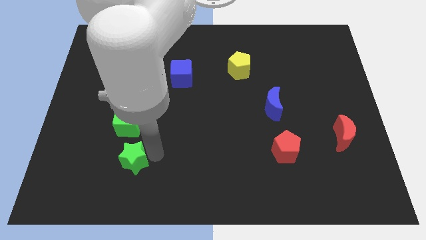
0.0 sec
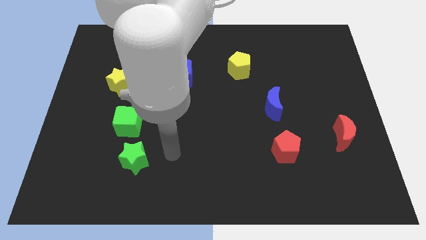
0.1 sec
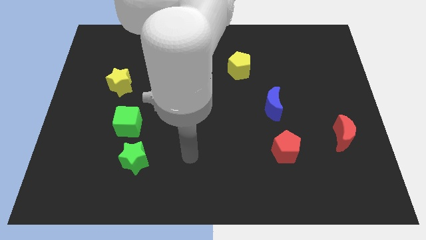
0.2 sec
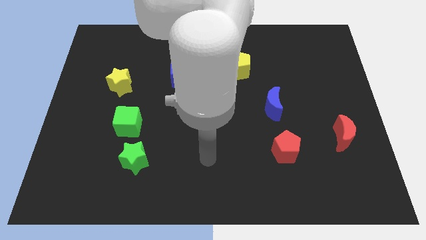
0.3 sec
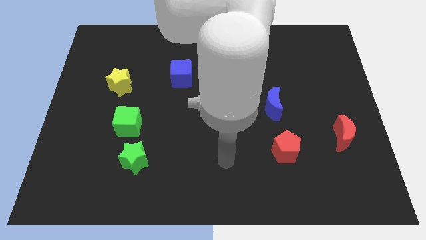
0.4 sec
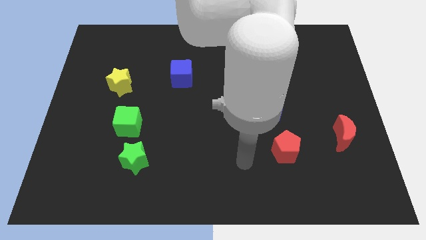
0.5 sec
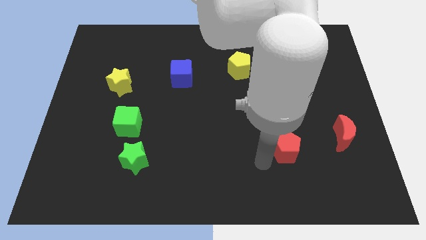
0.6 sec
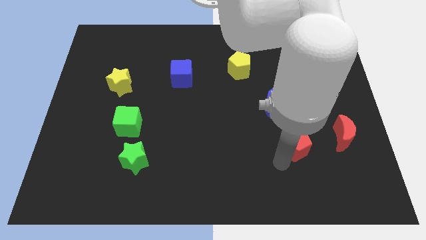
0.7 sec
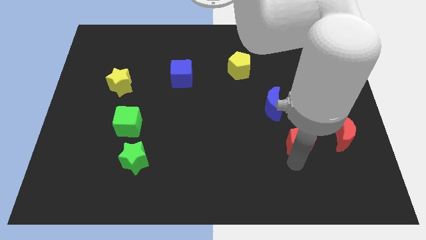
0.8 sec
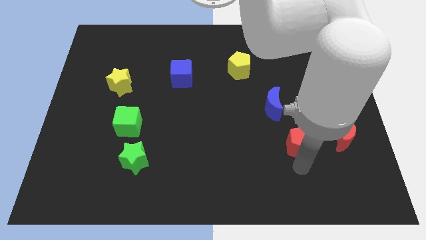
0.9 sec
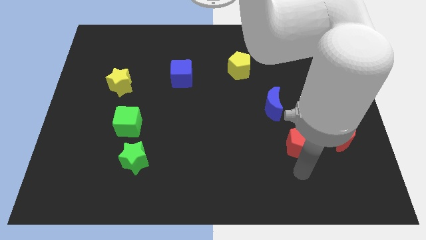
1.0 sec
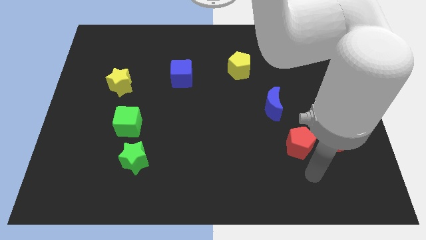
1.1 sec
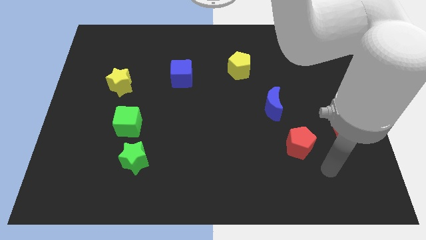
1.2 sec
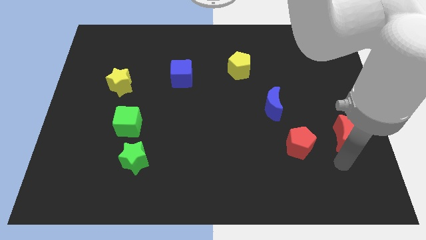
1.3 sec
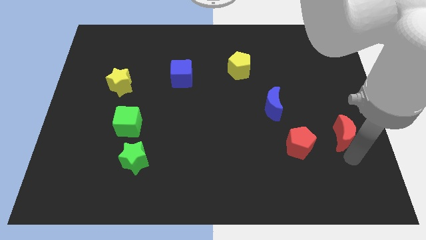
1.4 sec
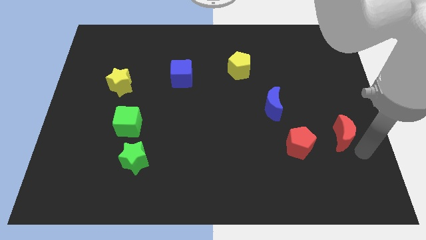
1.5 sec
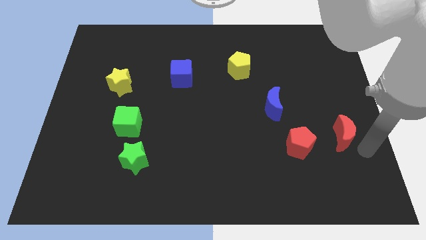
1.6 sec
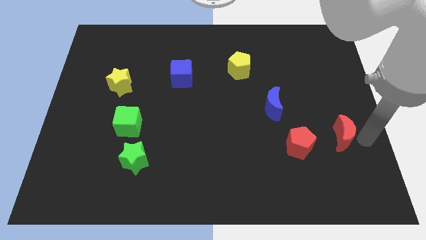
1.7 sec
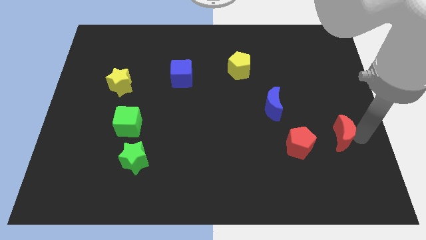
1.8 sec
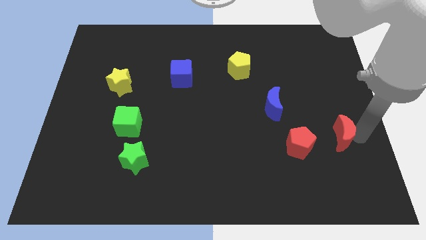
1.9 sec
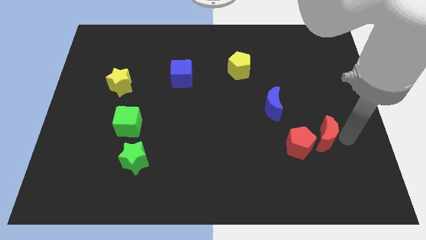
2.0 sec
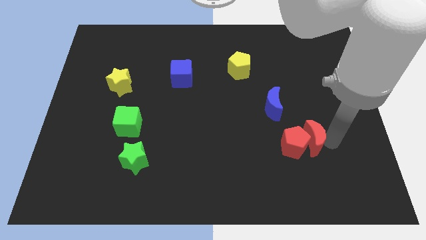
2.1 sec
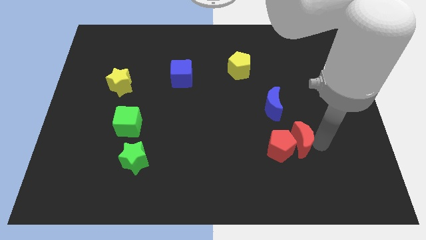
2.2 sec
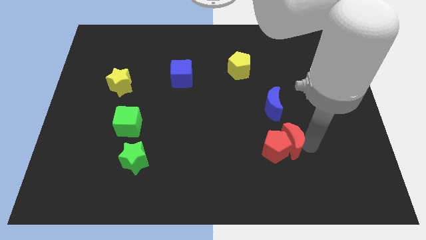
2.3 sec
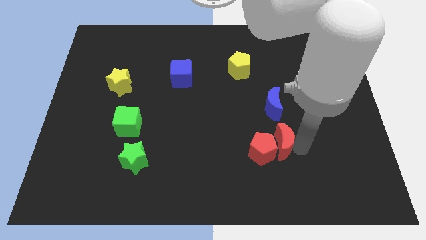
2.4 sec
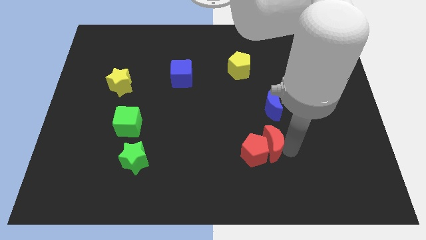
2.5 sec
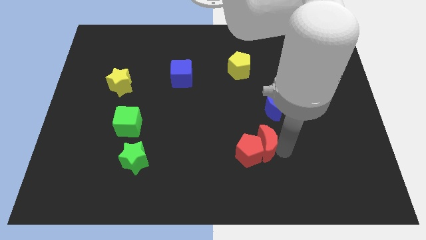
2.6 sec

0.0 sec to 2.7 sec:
move the red crescent into the red pentagon

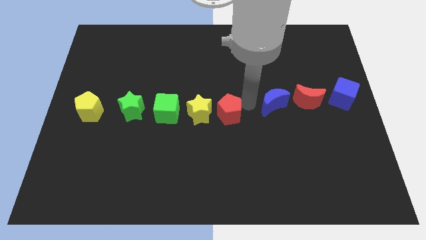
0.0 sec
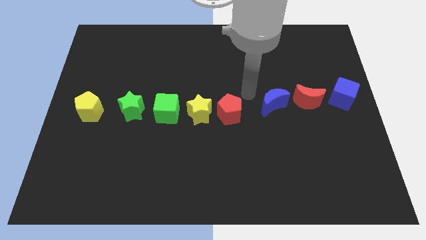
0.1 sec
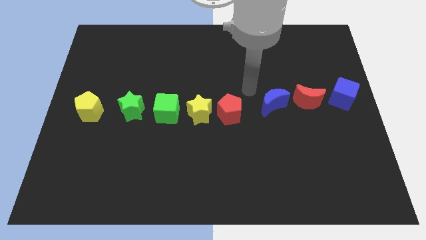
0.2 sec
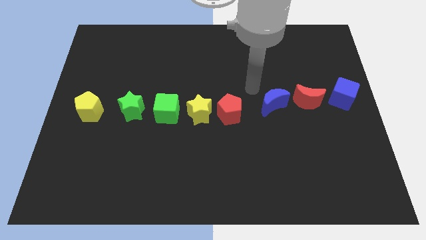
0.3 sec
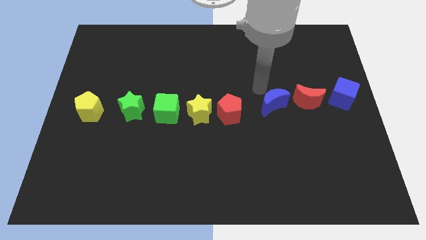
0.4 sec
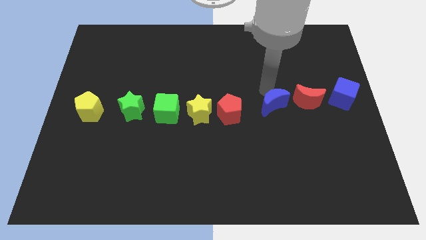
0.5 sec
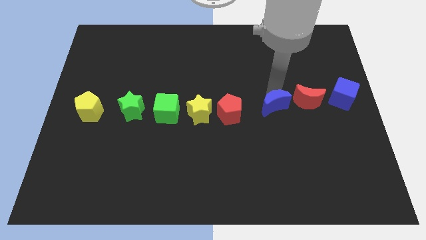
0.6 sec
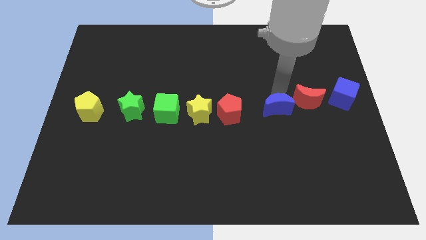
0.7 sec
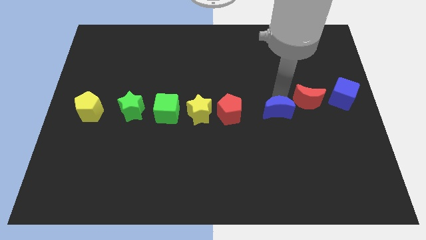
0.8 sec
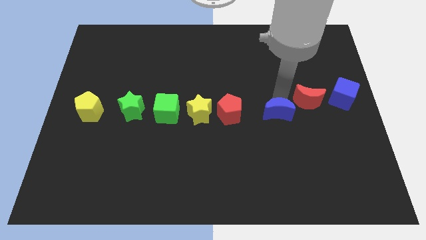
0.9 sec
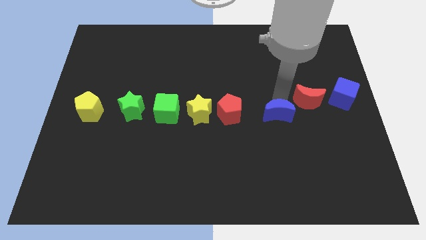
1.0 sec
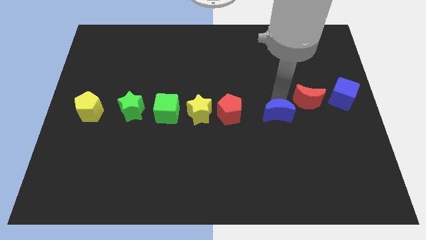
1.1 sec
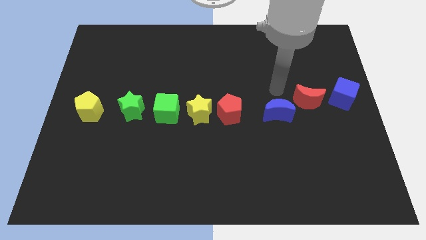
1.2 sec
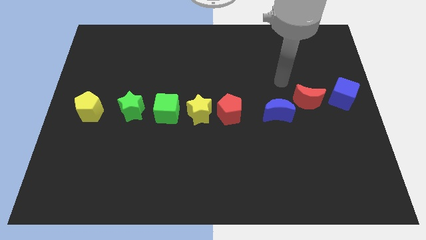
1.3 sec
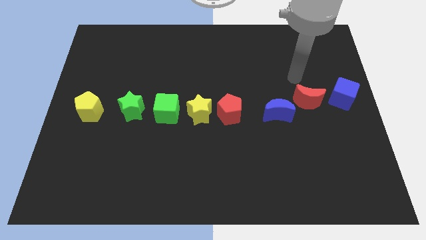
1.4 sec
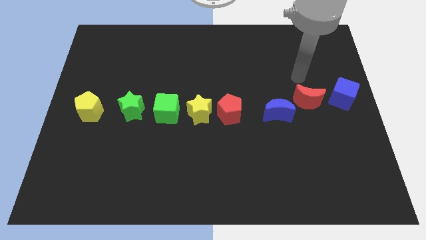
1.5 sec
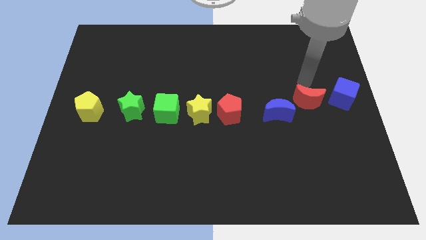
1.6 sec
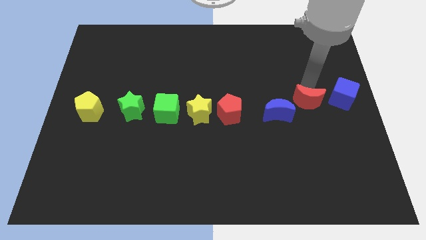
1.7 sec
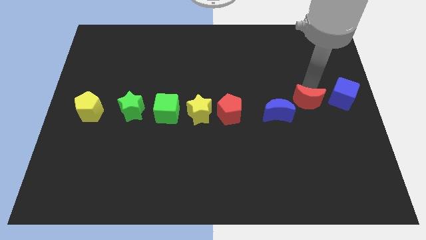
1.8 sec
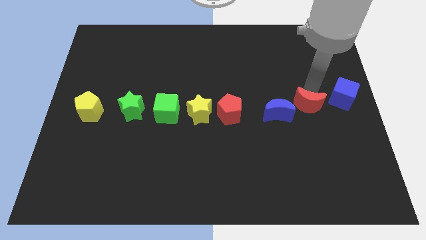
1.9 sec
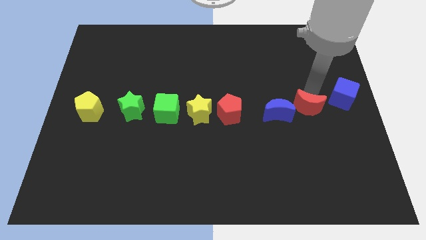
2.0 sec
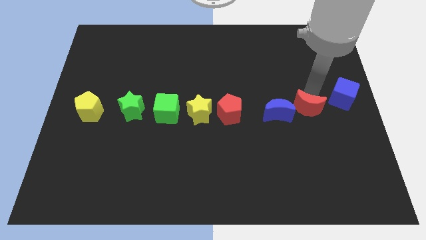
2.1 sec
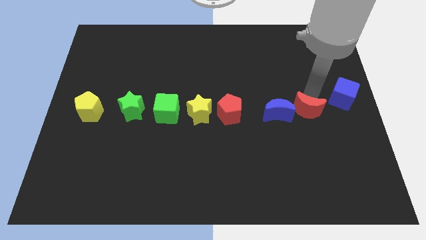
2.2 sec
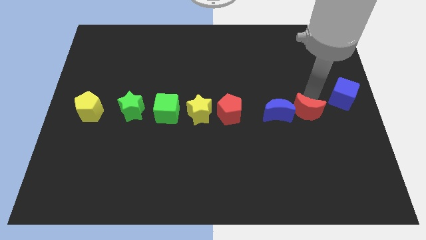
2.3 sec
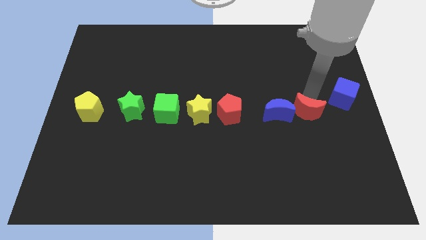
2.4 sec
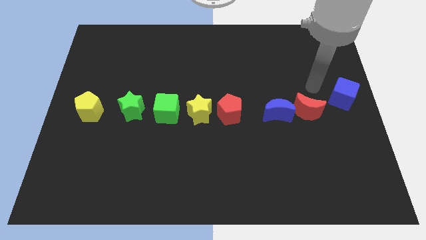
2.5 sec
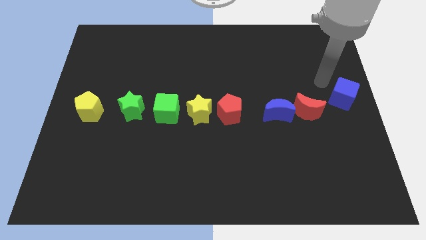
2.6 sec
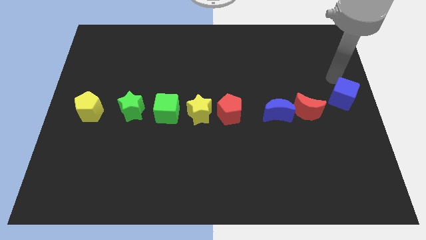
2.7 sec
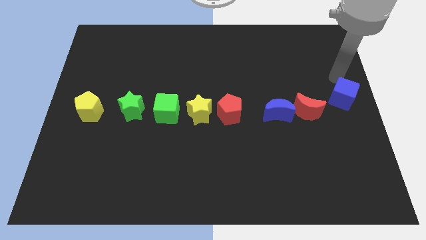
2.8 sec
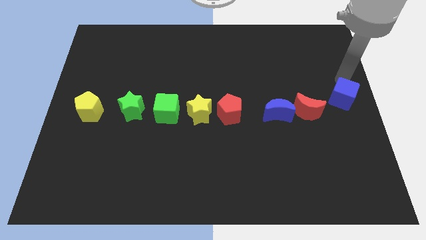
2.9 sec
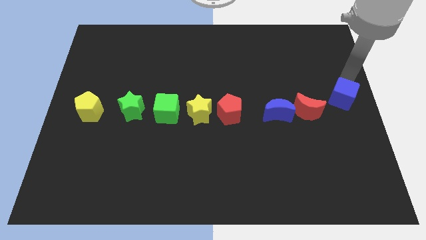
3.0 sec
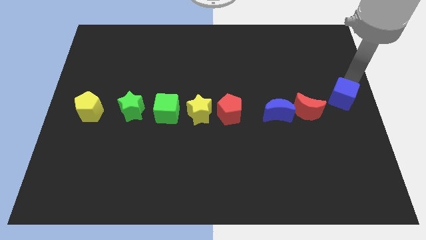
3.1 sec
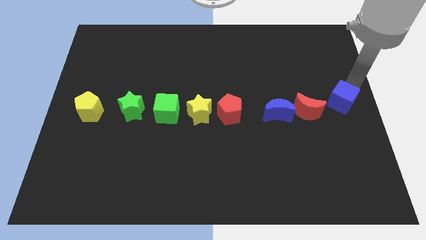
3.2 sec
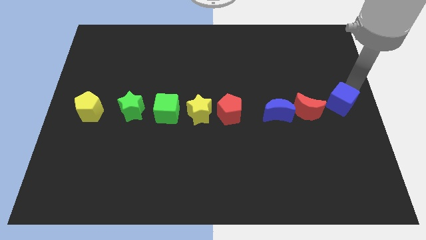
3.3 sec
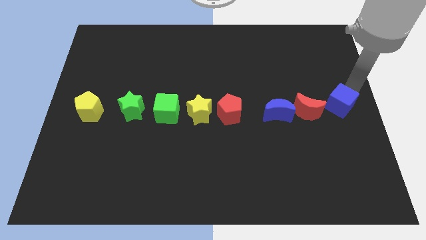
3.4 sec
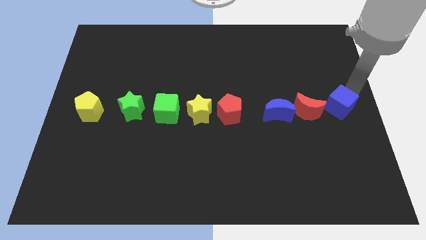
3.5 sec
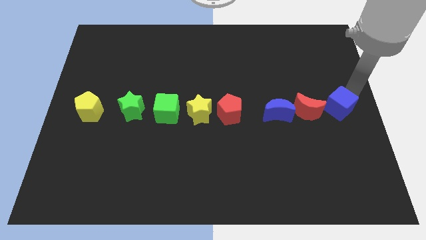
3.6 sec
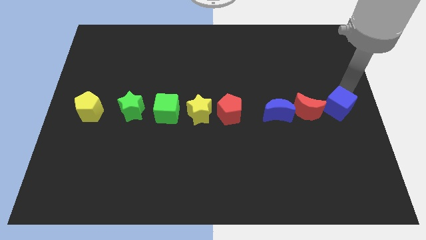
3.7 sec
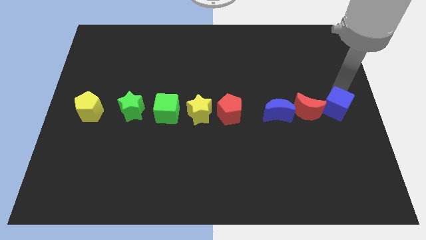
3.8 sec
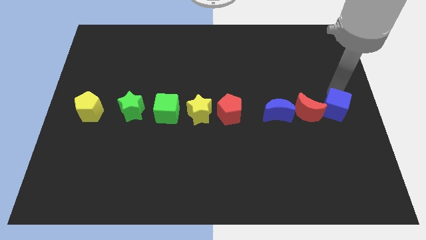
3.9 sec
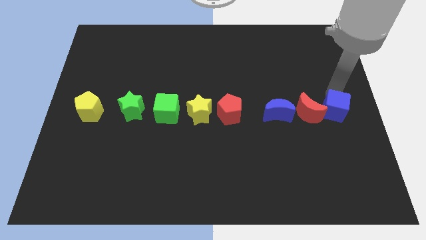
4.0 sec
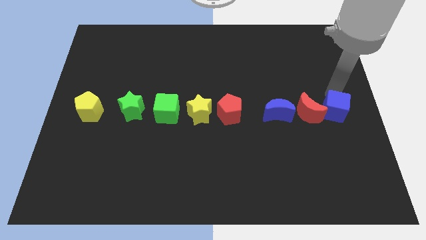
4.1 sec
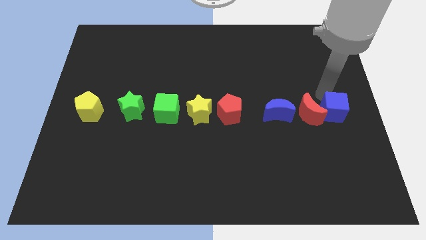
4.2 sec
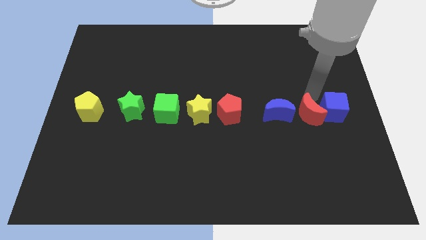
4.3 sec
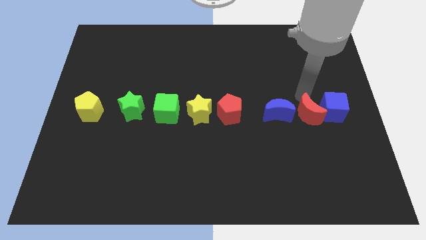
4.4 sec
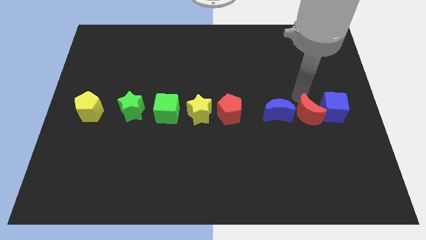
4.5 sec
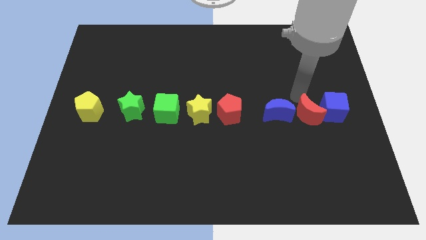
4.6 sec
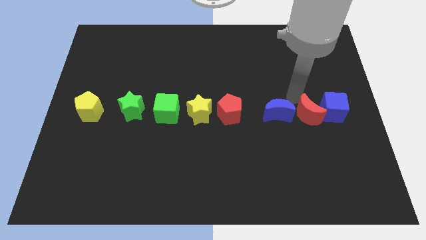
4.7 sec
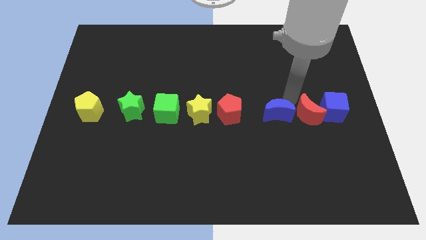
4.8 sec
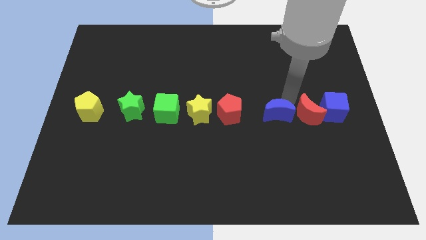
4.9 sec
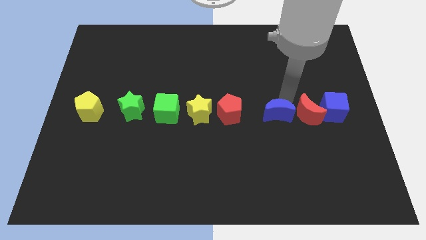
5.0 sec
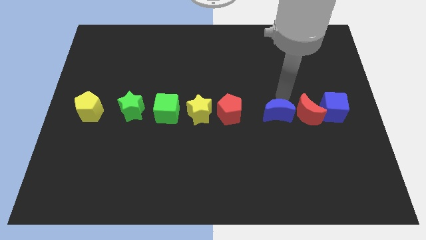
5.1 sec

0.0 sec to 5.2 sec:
slightly move the blue moon and red crescent towards down

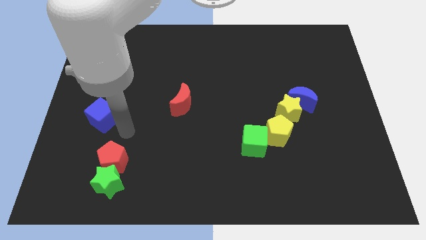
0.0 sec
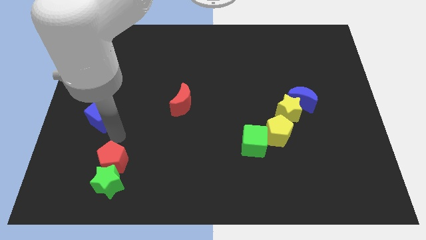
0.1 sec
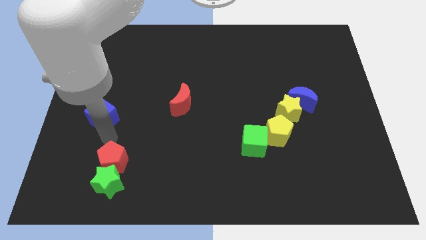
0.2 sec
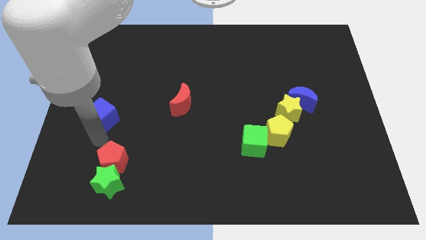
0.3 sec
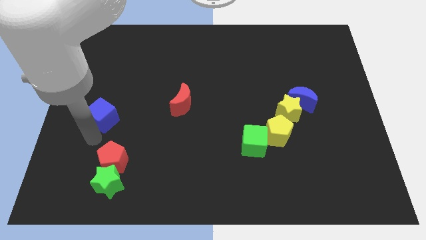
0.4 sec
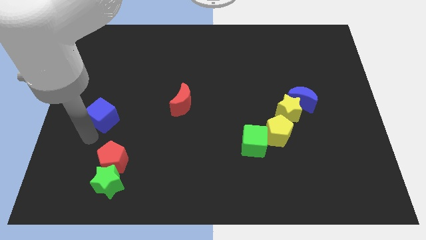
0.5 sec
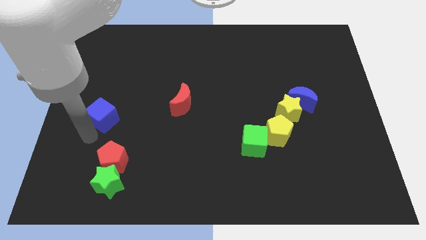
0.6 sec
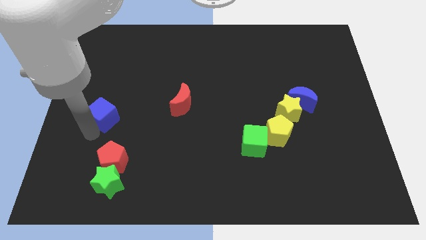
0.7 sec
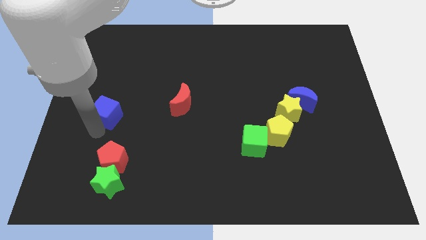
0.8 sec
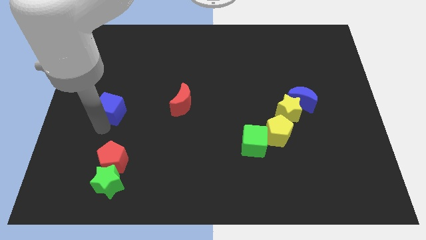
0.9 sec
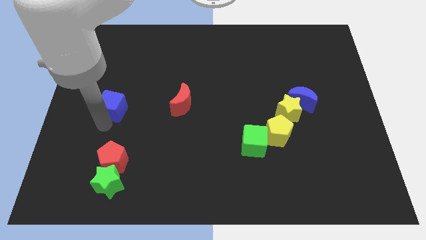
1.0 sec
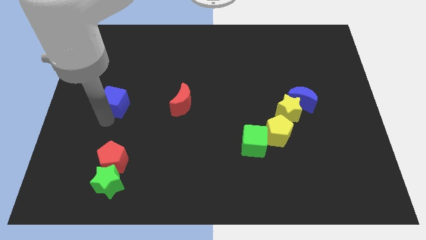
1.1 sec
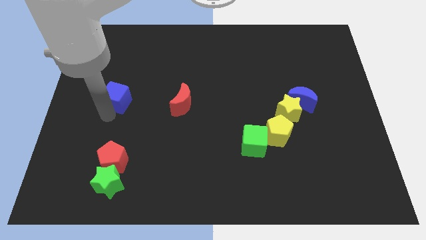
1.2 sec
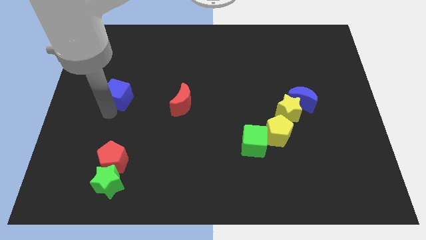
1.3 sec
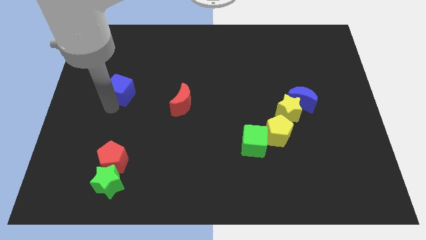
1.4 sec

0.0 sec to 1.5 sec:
place blue cube parallel left to red moon
